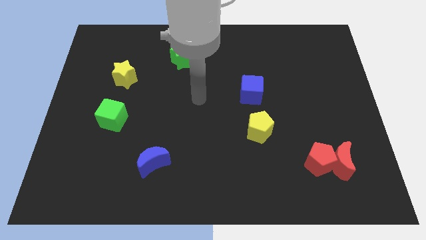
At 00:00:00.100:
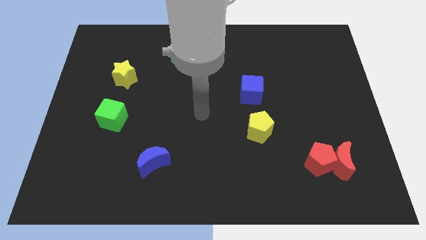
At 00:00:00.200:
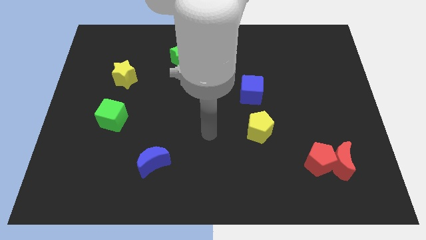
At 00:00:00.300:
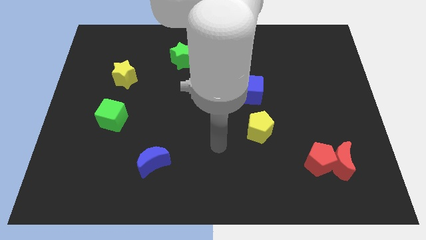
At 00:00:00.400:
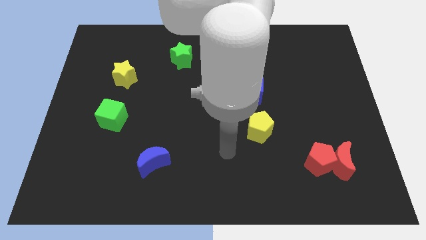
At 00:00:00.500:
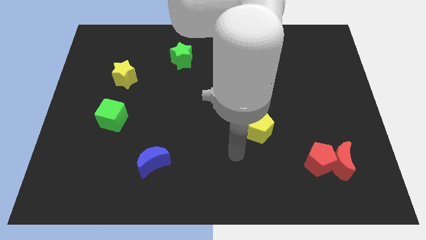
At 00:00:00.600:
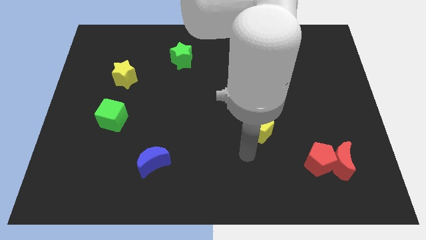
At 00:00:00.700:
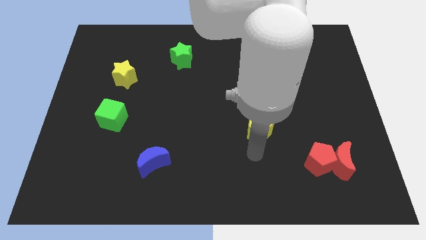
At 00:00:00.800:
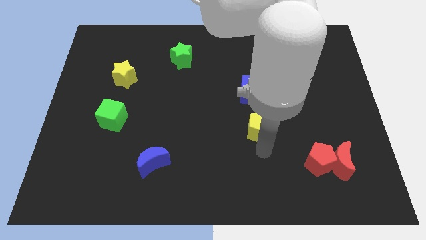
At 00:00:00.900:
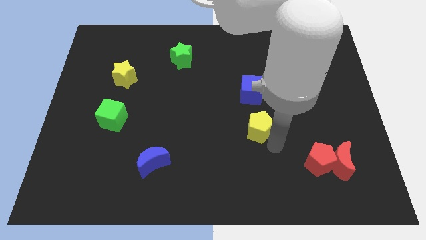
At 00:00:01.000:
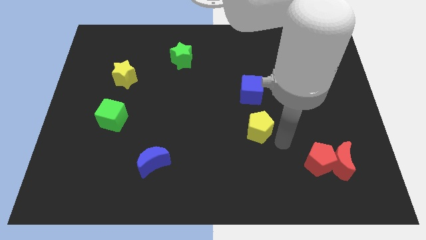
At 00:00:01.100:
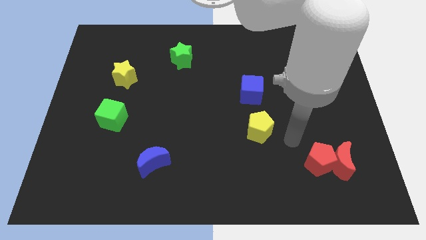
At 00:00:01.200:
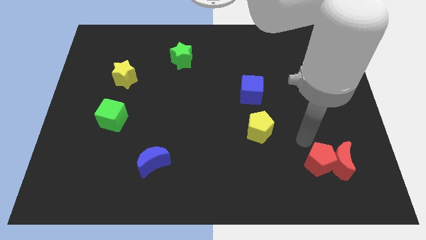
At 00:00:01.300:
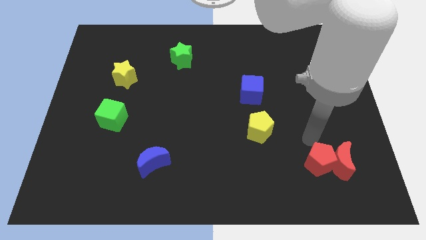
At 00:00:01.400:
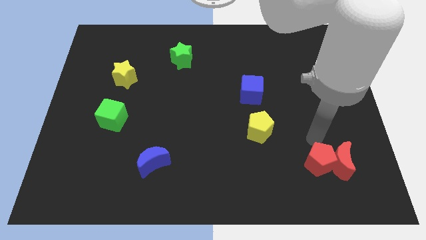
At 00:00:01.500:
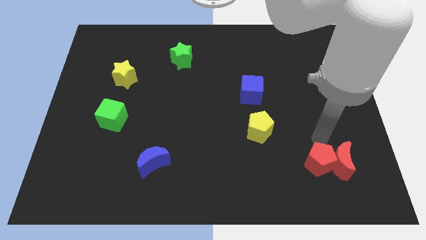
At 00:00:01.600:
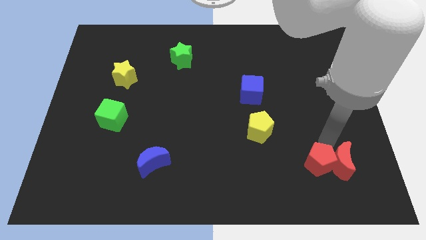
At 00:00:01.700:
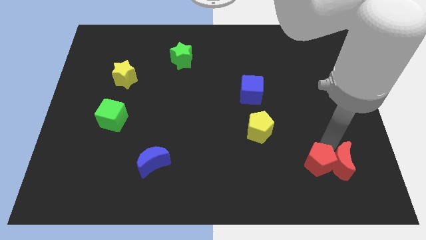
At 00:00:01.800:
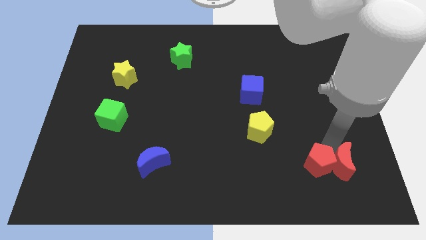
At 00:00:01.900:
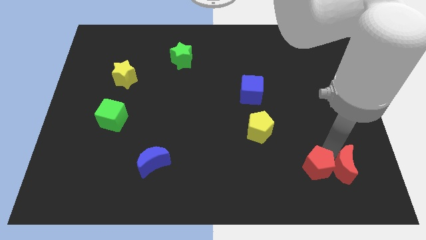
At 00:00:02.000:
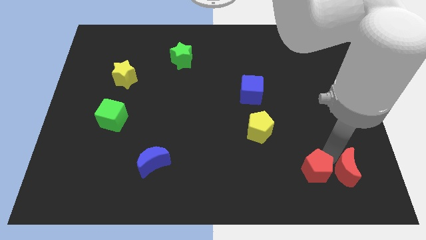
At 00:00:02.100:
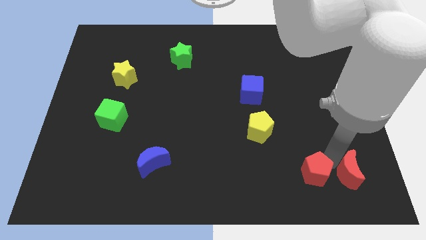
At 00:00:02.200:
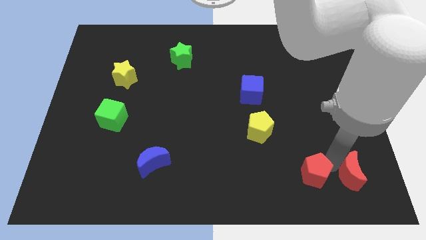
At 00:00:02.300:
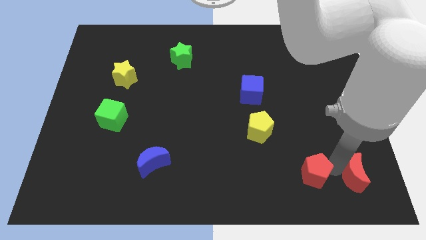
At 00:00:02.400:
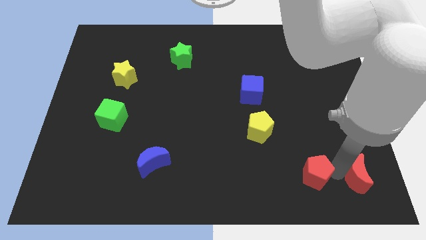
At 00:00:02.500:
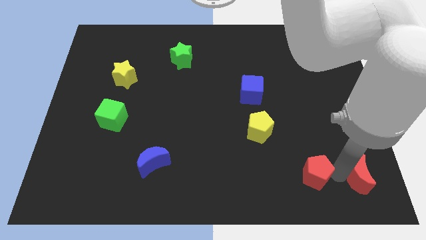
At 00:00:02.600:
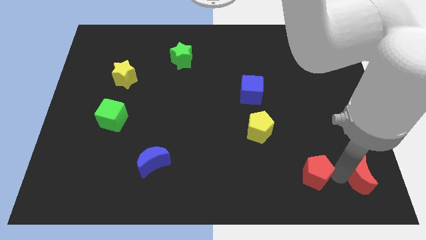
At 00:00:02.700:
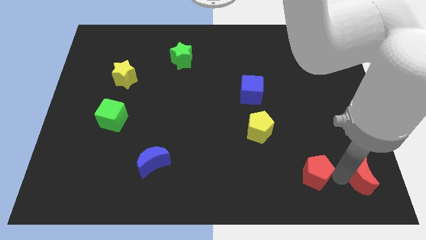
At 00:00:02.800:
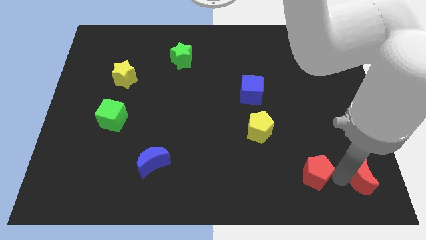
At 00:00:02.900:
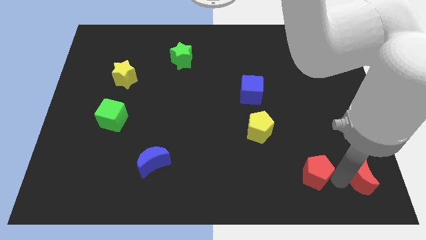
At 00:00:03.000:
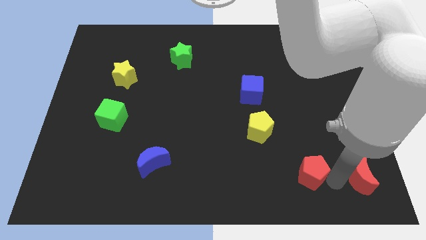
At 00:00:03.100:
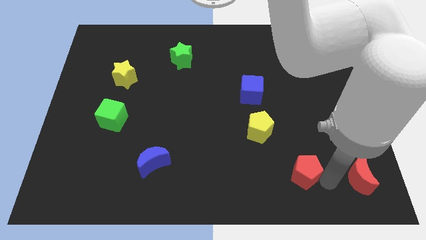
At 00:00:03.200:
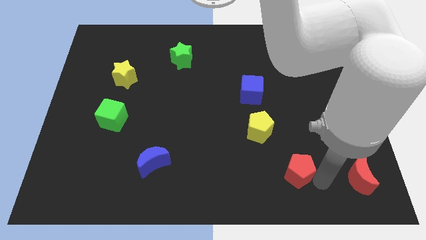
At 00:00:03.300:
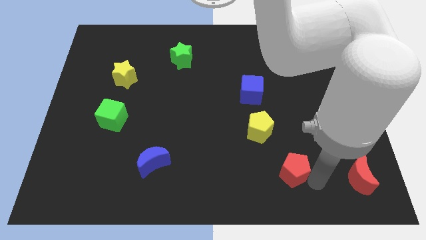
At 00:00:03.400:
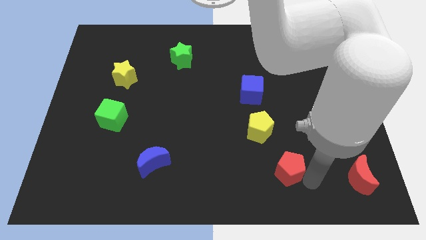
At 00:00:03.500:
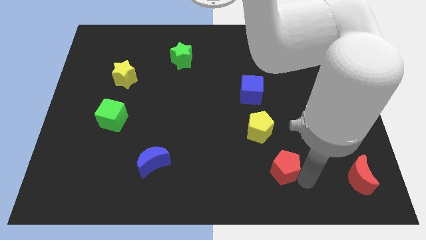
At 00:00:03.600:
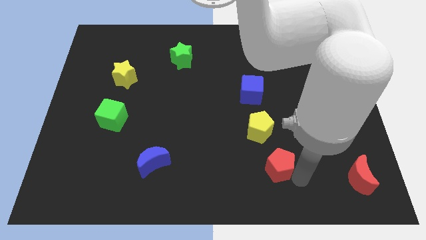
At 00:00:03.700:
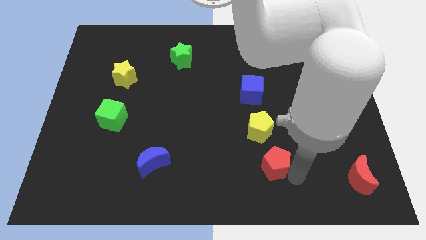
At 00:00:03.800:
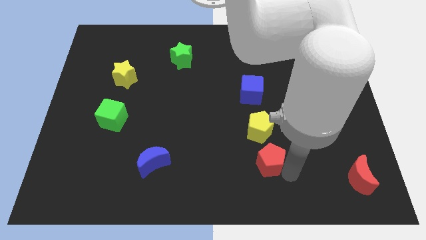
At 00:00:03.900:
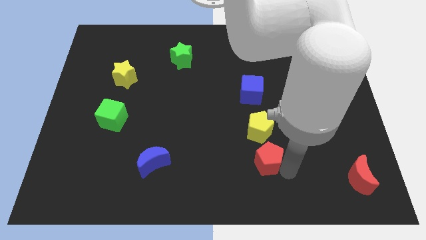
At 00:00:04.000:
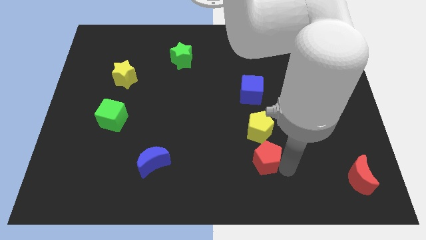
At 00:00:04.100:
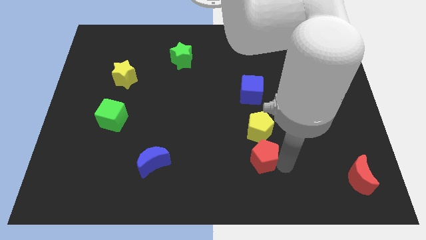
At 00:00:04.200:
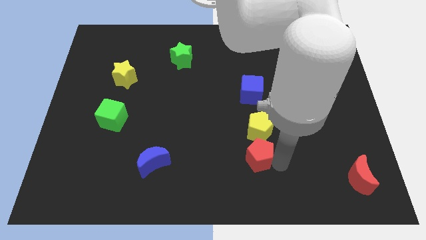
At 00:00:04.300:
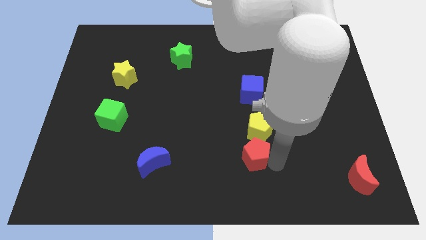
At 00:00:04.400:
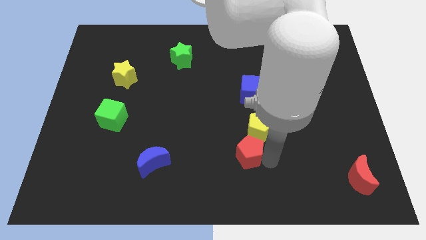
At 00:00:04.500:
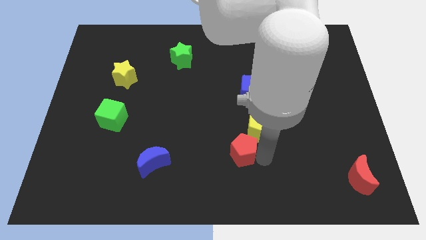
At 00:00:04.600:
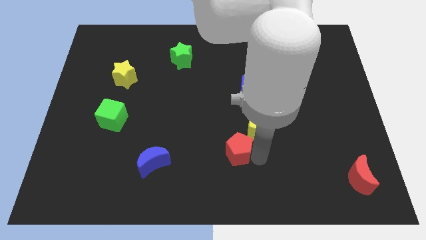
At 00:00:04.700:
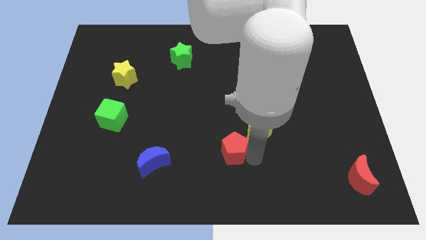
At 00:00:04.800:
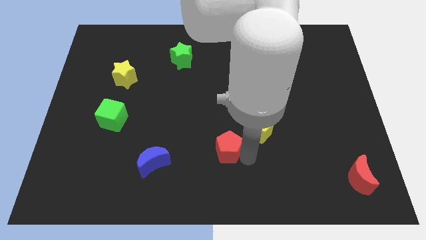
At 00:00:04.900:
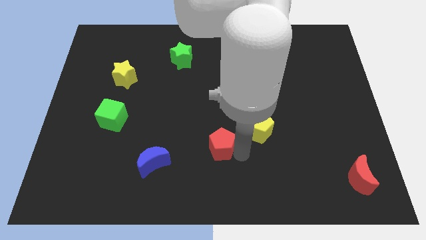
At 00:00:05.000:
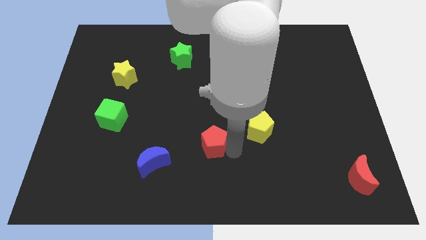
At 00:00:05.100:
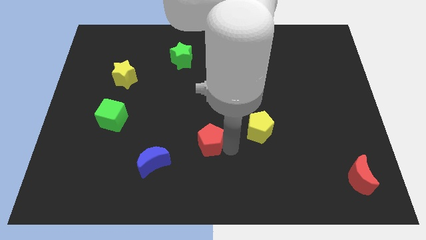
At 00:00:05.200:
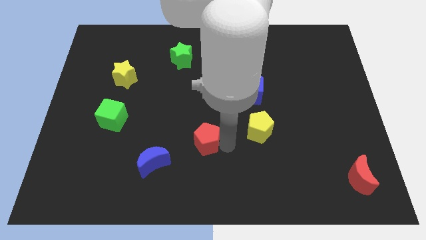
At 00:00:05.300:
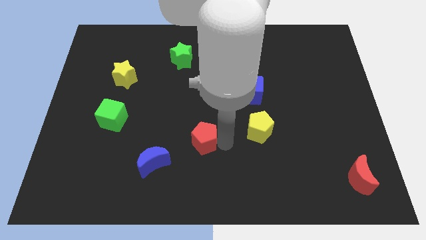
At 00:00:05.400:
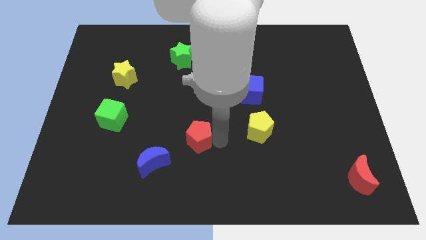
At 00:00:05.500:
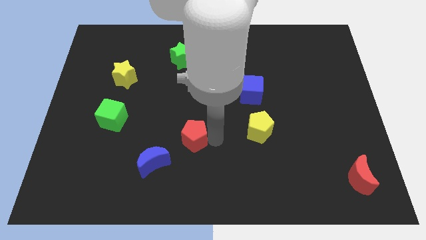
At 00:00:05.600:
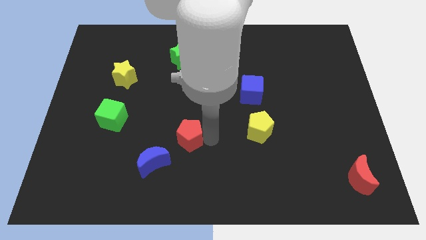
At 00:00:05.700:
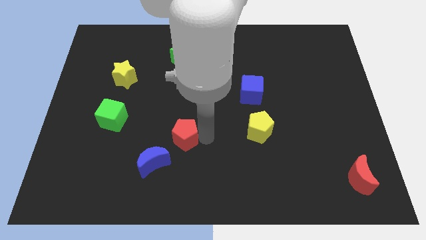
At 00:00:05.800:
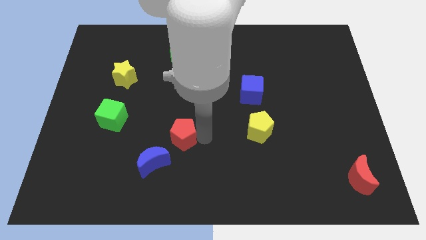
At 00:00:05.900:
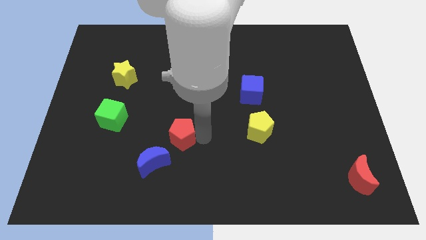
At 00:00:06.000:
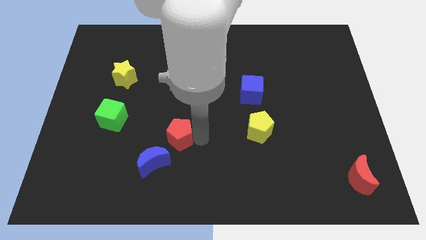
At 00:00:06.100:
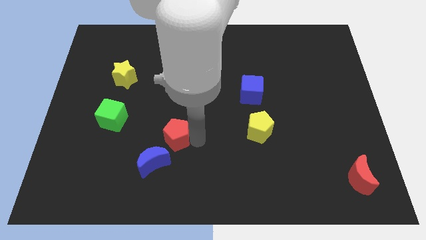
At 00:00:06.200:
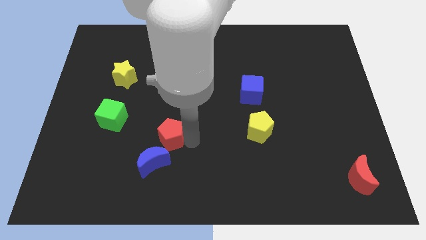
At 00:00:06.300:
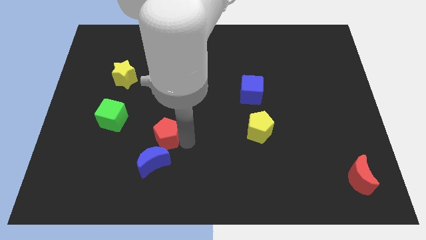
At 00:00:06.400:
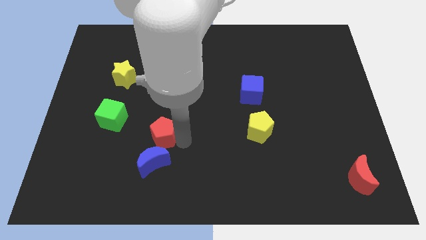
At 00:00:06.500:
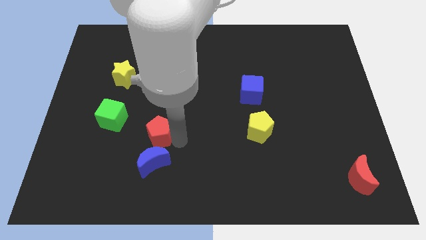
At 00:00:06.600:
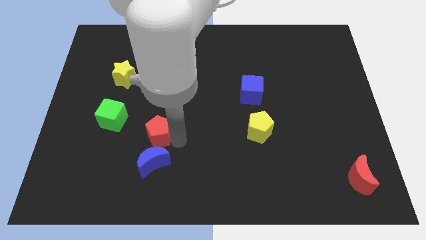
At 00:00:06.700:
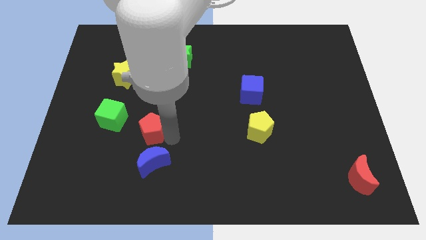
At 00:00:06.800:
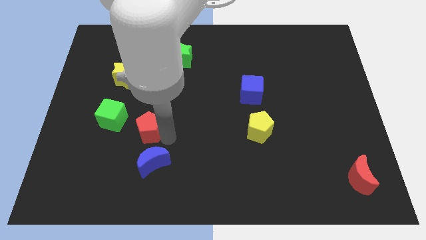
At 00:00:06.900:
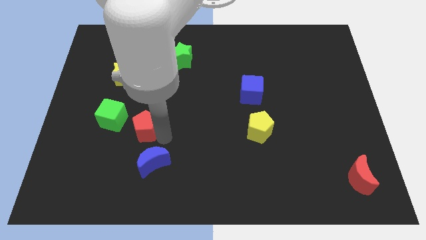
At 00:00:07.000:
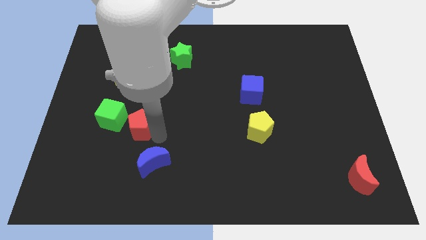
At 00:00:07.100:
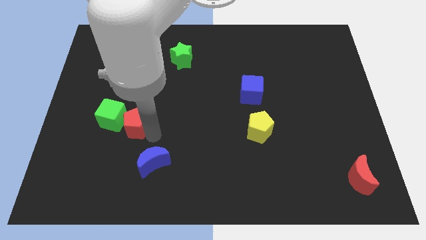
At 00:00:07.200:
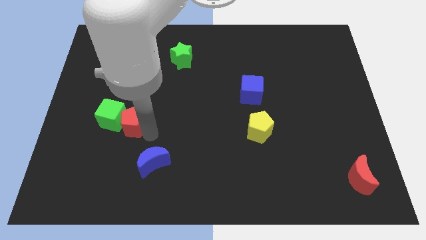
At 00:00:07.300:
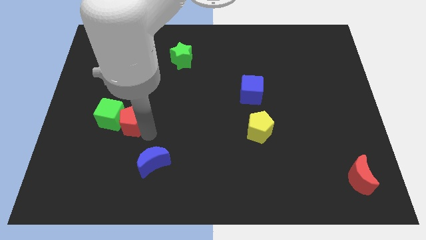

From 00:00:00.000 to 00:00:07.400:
push the red pentagon to the green cube

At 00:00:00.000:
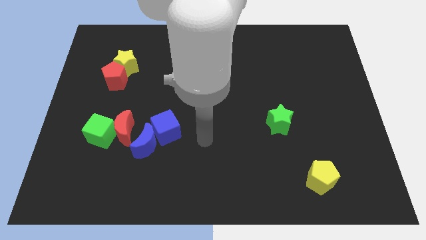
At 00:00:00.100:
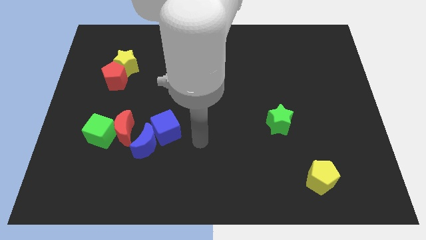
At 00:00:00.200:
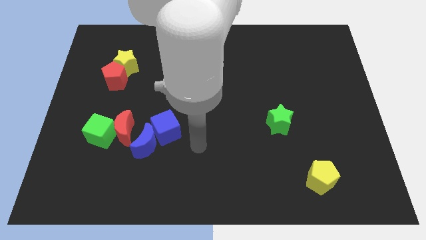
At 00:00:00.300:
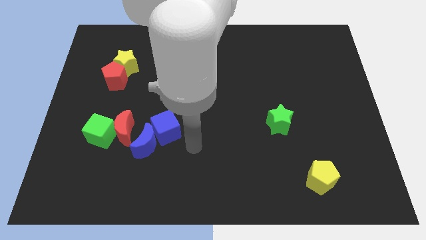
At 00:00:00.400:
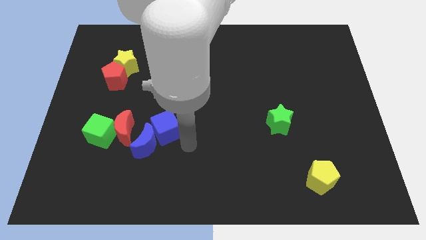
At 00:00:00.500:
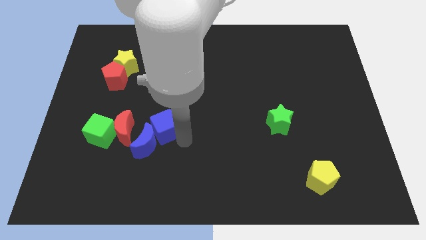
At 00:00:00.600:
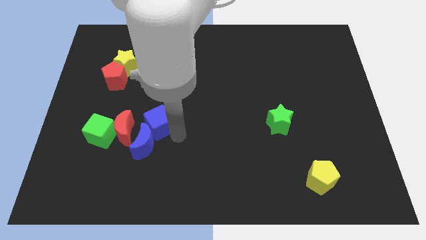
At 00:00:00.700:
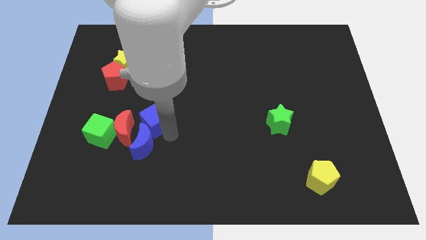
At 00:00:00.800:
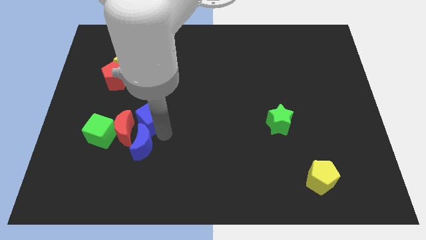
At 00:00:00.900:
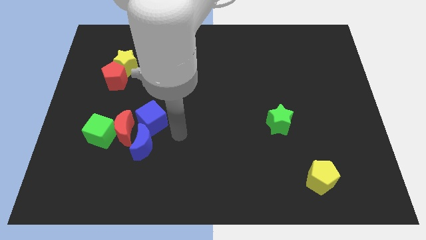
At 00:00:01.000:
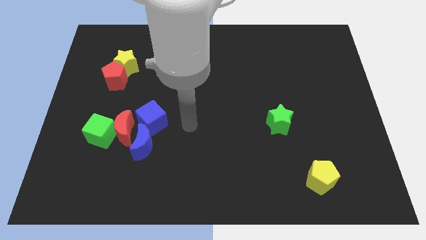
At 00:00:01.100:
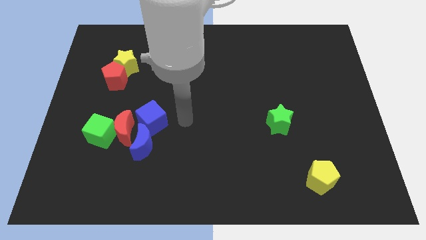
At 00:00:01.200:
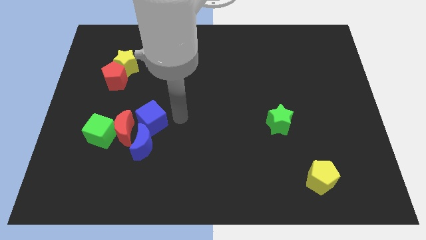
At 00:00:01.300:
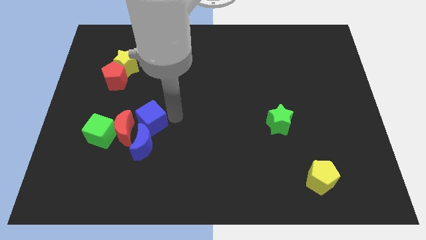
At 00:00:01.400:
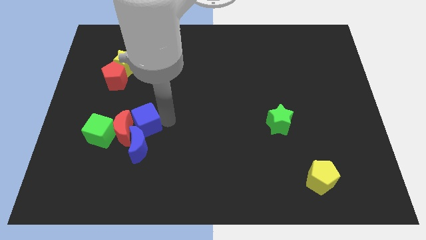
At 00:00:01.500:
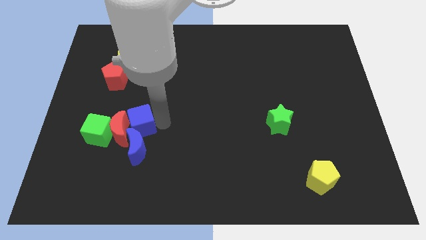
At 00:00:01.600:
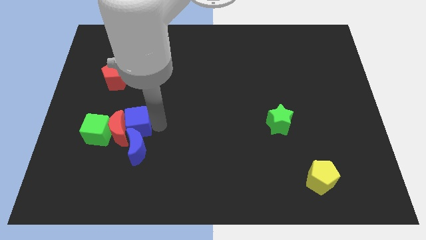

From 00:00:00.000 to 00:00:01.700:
put the blue cube to the red moon
